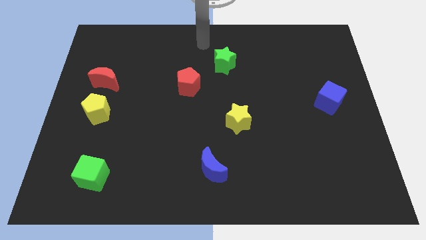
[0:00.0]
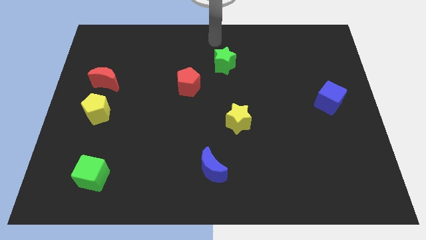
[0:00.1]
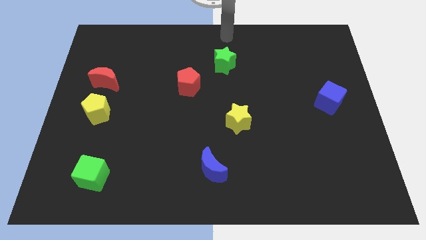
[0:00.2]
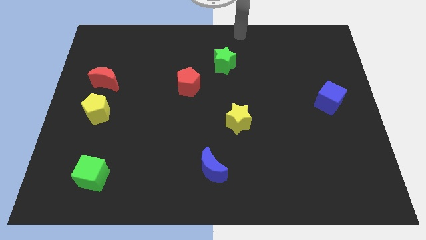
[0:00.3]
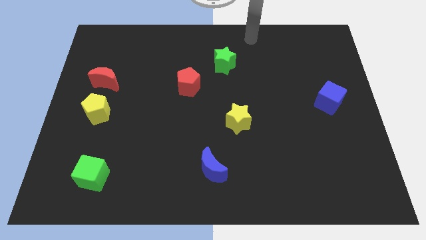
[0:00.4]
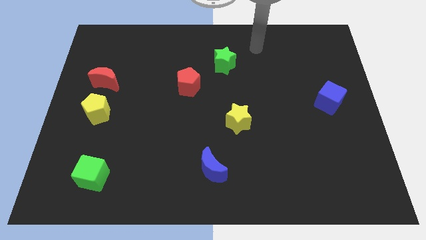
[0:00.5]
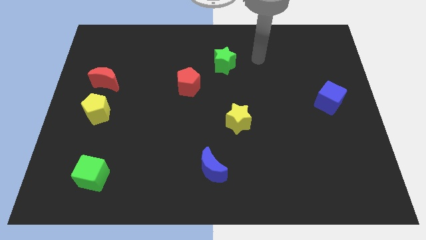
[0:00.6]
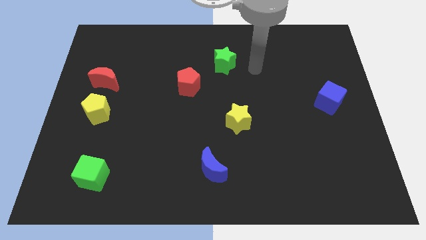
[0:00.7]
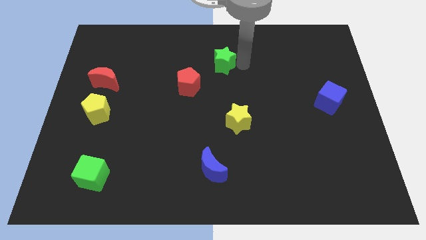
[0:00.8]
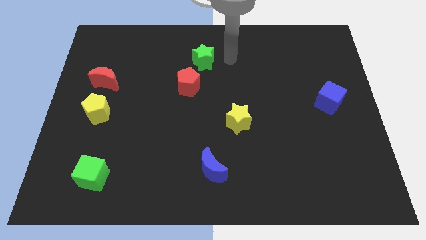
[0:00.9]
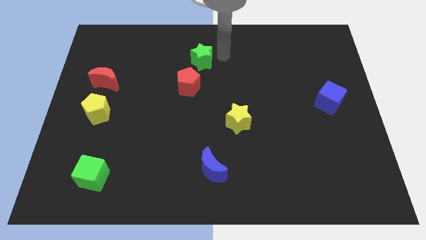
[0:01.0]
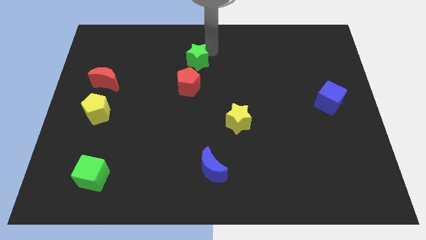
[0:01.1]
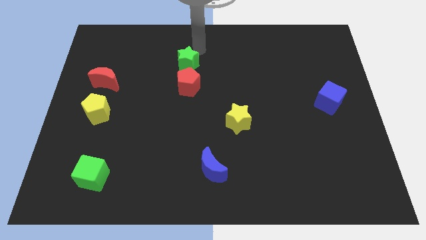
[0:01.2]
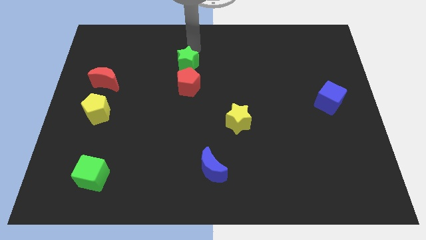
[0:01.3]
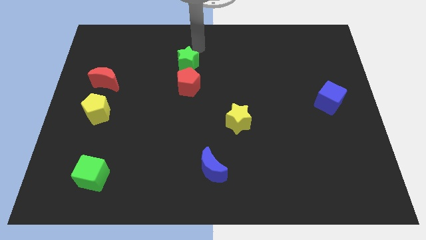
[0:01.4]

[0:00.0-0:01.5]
place green star to the top of the red pentagon

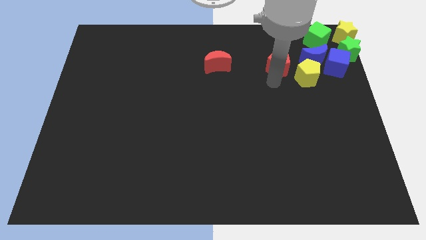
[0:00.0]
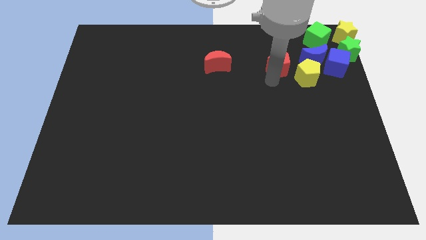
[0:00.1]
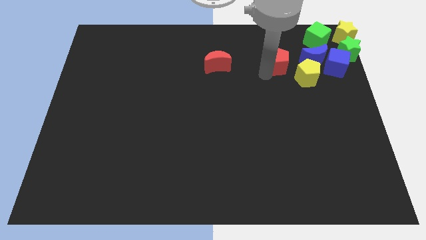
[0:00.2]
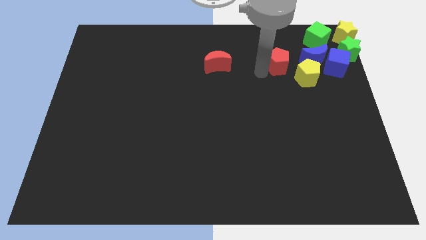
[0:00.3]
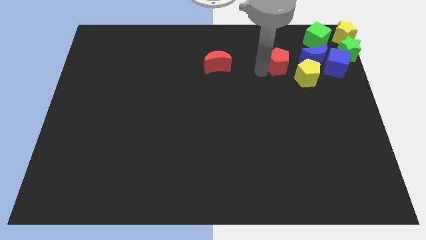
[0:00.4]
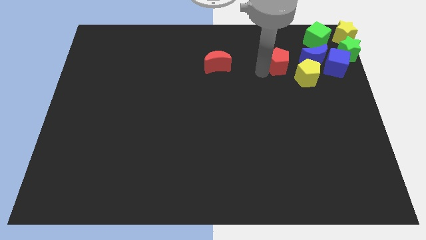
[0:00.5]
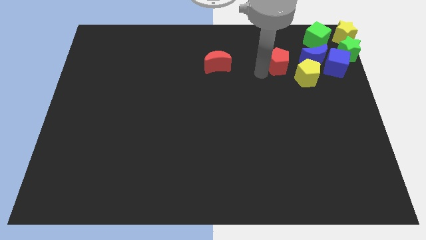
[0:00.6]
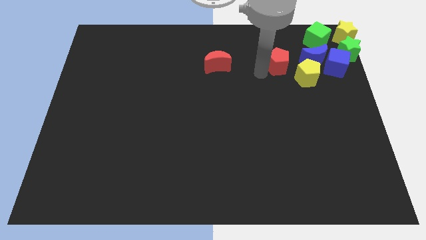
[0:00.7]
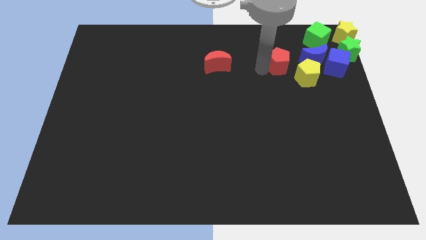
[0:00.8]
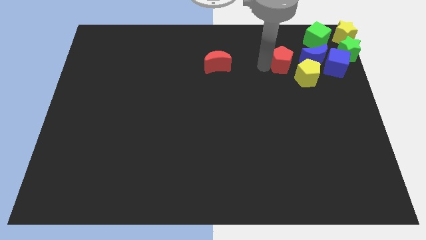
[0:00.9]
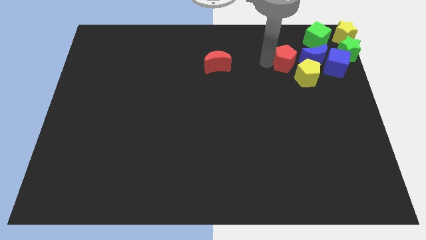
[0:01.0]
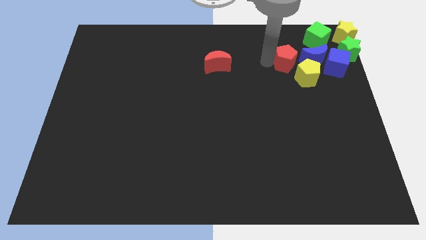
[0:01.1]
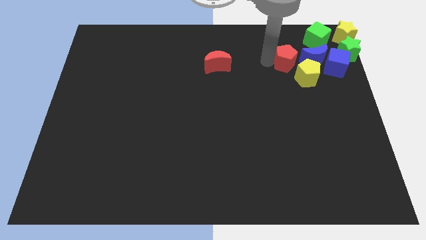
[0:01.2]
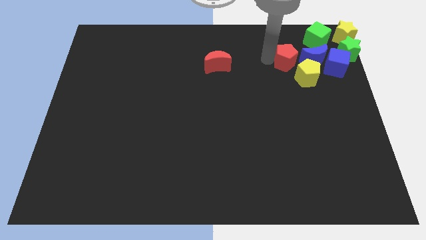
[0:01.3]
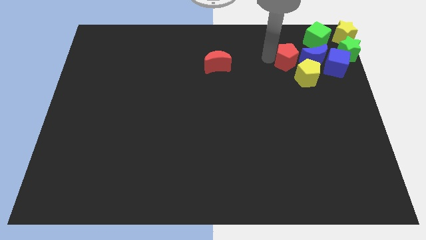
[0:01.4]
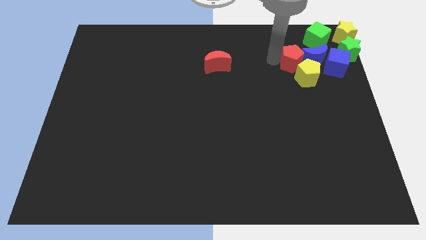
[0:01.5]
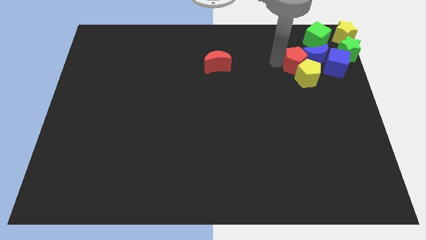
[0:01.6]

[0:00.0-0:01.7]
drag the red pentagon left to the blue moon

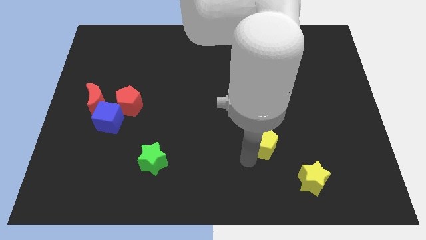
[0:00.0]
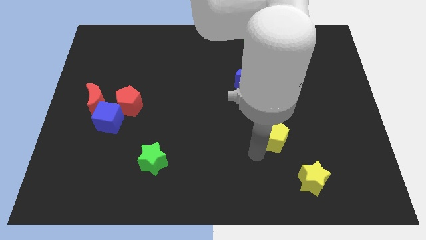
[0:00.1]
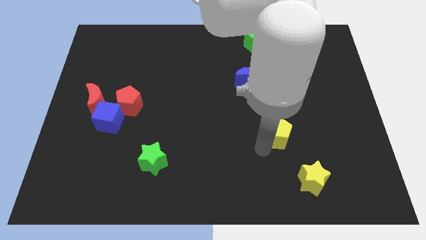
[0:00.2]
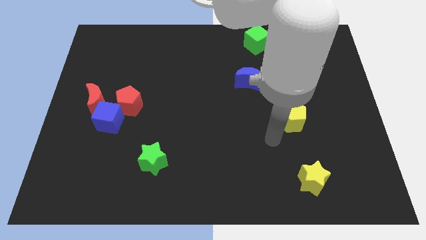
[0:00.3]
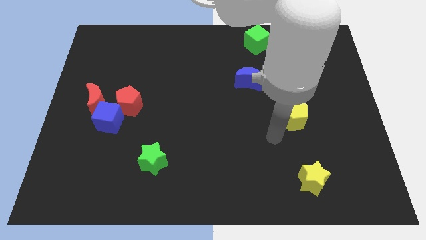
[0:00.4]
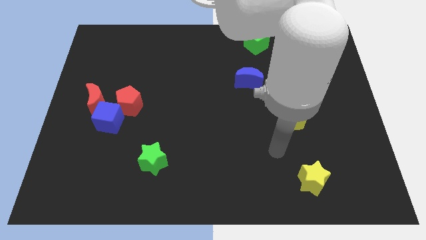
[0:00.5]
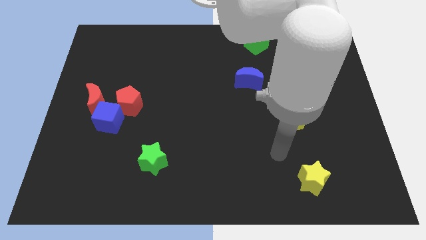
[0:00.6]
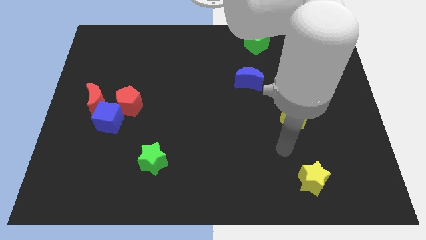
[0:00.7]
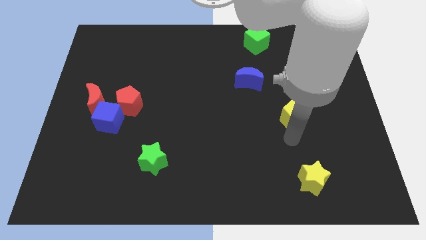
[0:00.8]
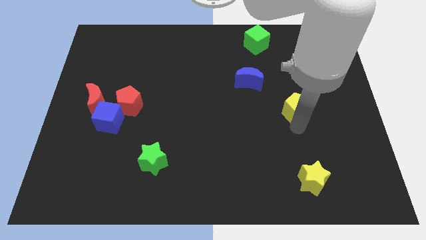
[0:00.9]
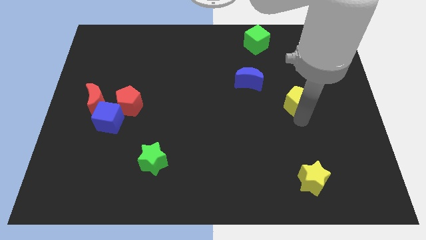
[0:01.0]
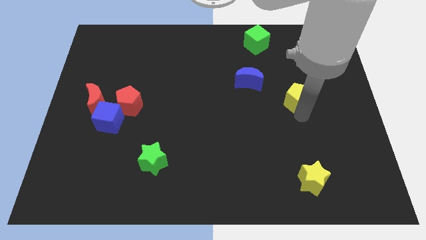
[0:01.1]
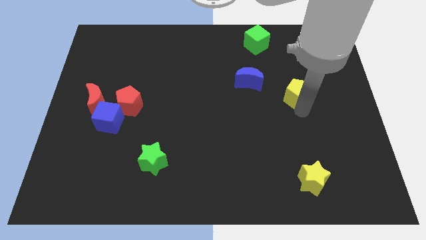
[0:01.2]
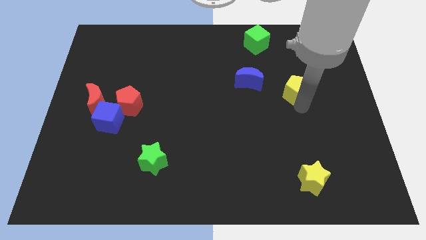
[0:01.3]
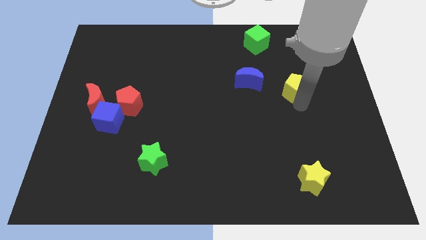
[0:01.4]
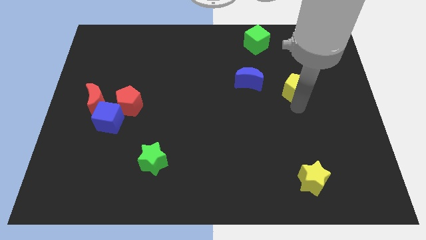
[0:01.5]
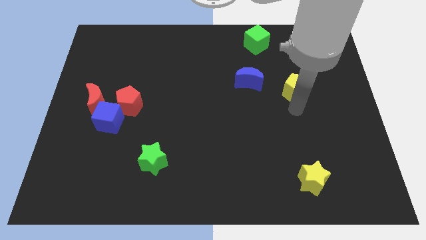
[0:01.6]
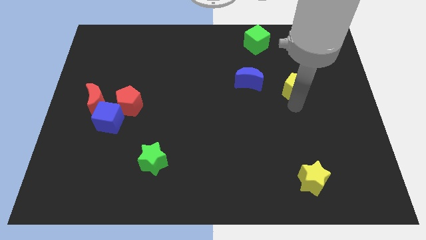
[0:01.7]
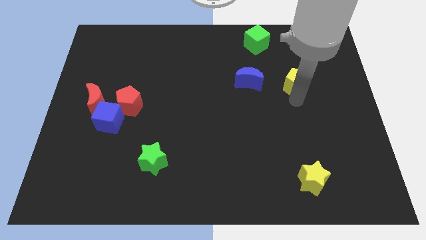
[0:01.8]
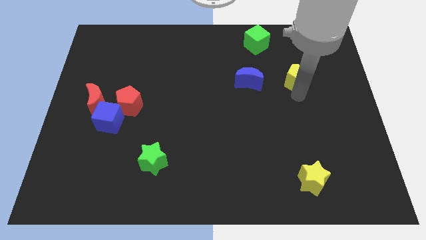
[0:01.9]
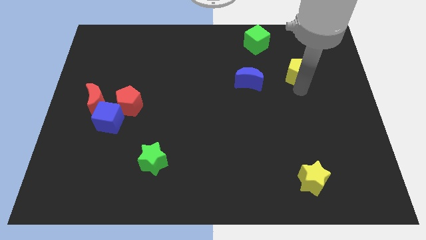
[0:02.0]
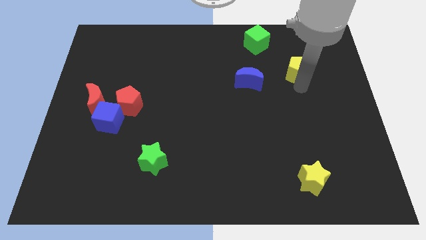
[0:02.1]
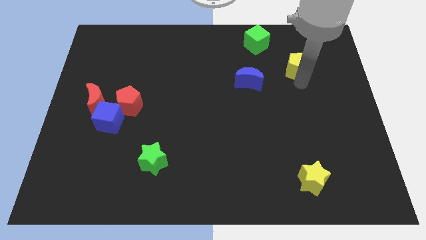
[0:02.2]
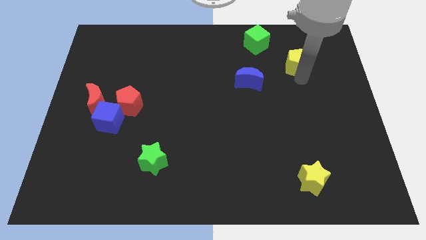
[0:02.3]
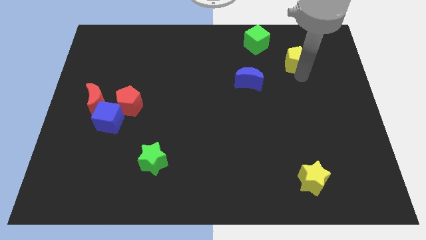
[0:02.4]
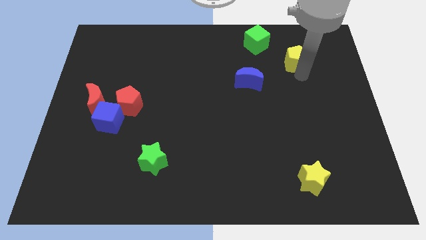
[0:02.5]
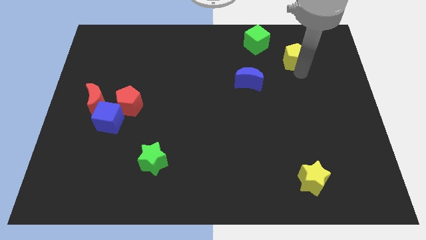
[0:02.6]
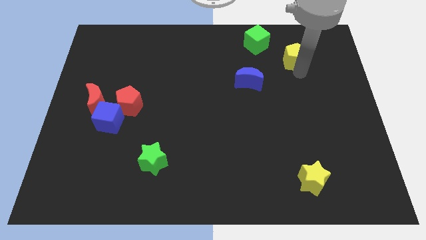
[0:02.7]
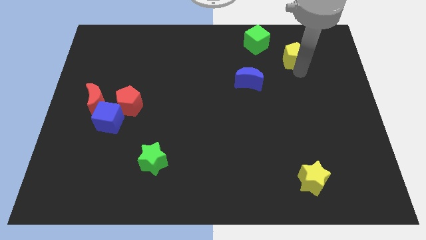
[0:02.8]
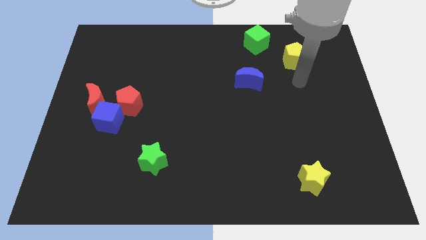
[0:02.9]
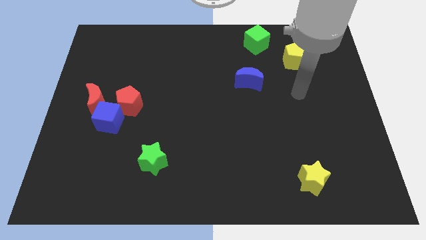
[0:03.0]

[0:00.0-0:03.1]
make a triangle with the yellow pentagon green cube and blue crescent at the top side of the board

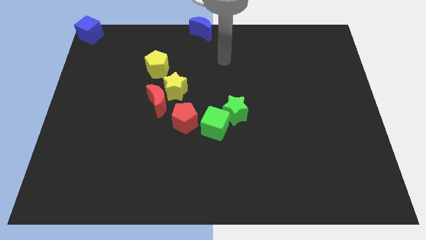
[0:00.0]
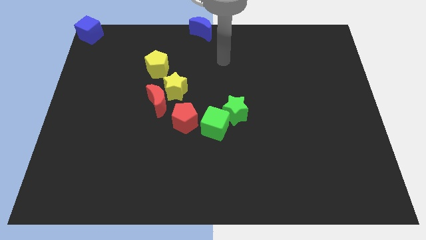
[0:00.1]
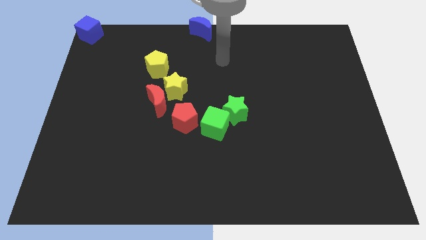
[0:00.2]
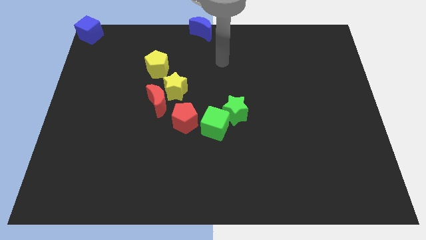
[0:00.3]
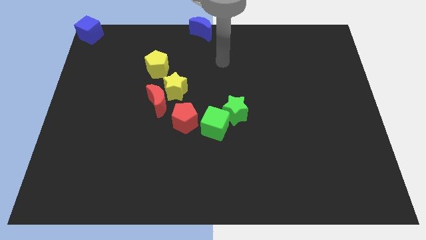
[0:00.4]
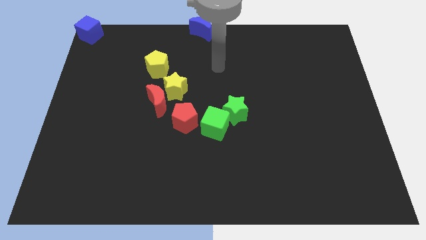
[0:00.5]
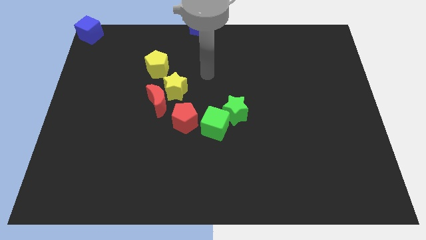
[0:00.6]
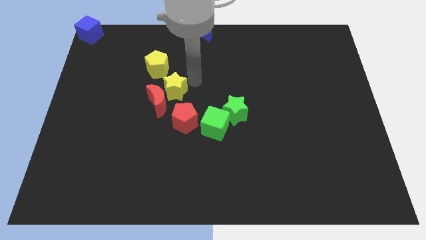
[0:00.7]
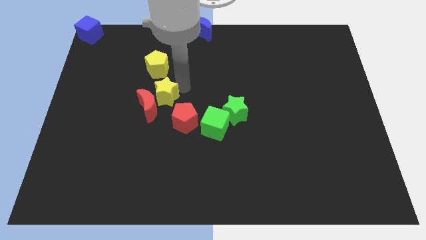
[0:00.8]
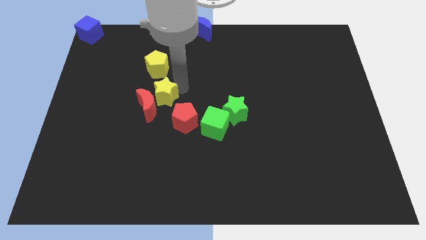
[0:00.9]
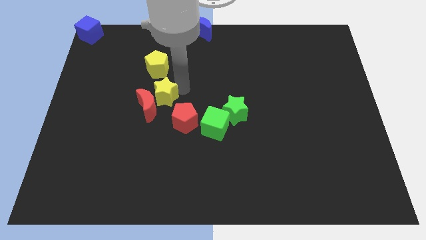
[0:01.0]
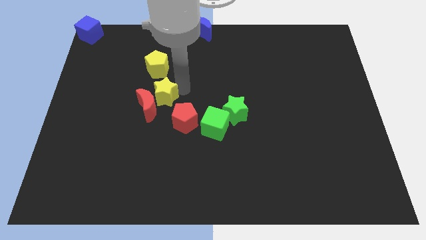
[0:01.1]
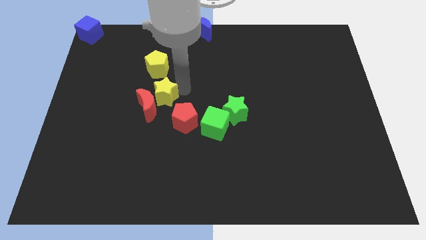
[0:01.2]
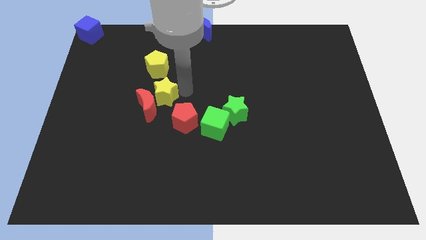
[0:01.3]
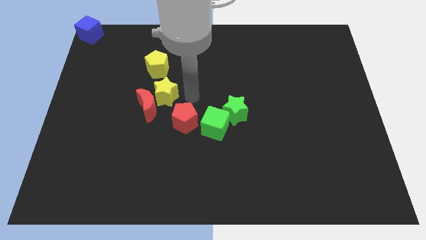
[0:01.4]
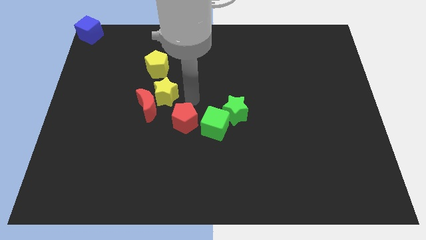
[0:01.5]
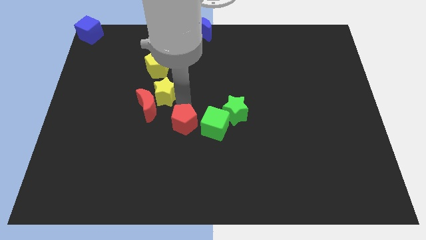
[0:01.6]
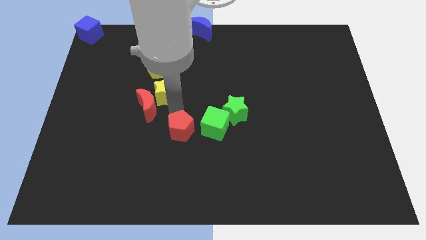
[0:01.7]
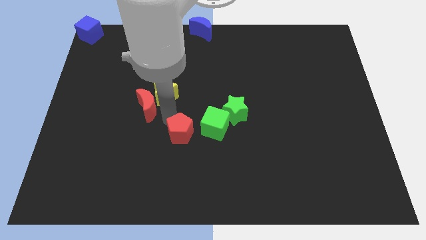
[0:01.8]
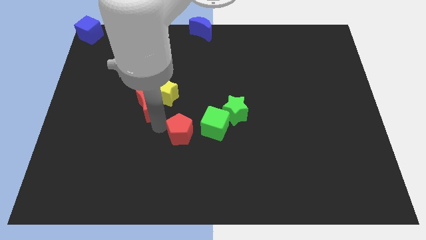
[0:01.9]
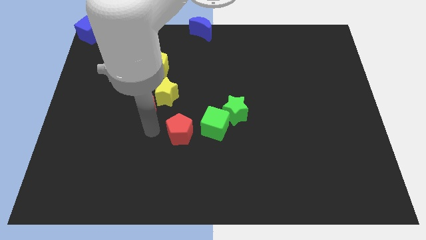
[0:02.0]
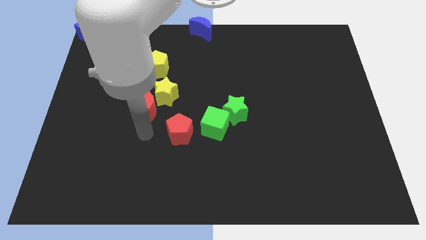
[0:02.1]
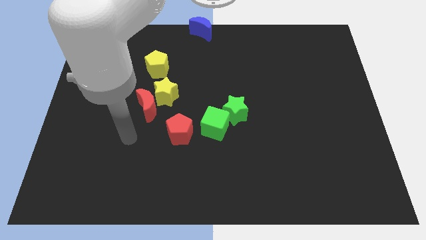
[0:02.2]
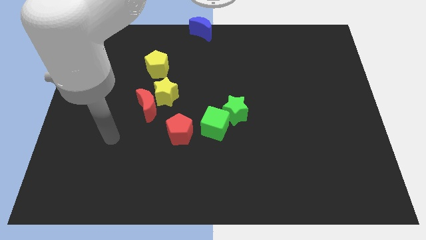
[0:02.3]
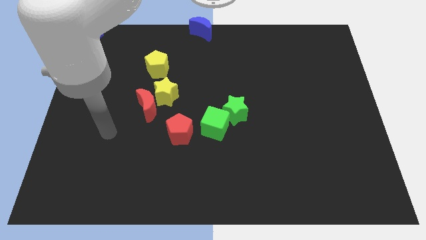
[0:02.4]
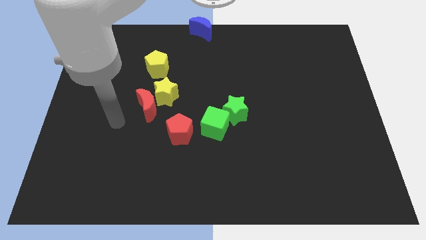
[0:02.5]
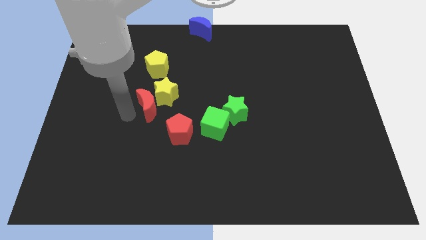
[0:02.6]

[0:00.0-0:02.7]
slightly push to the bottom of the red pentagon
